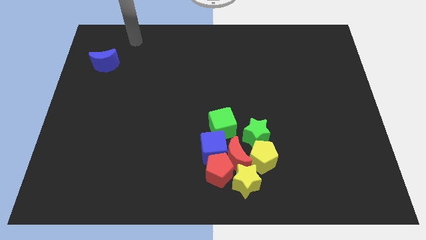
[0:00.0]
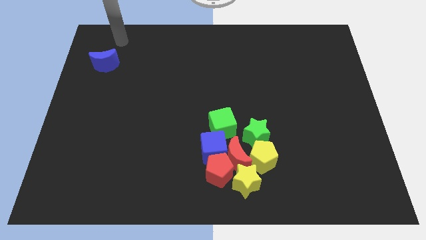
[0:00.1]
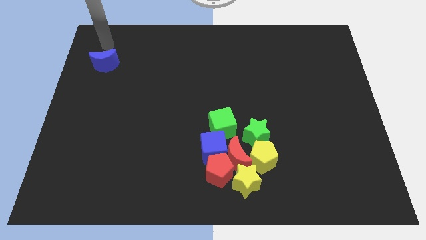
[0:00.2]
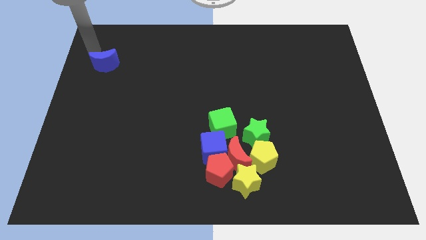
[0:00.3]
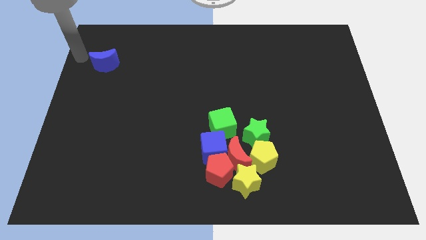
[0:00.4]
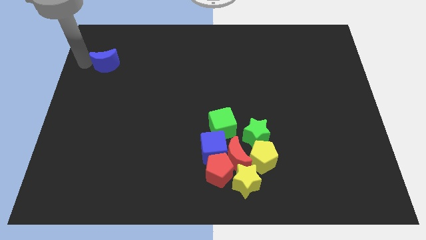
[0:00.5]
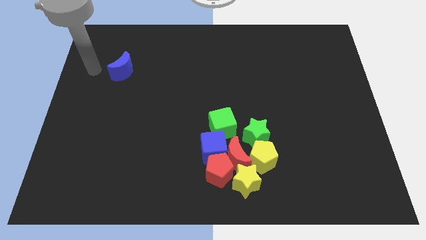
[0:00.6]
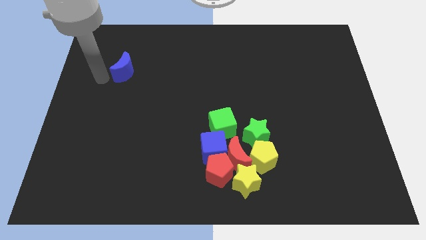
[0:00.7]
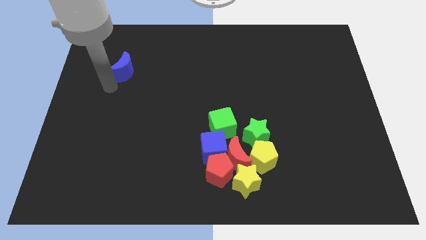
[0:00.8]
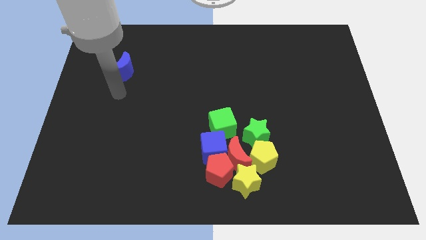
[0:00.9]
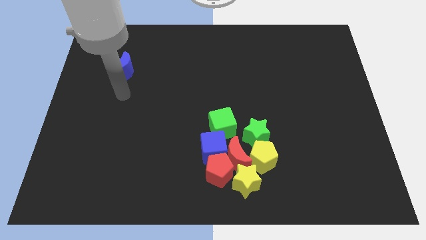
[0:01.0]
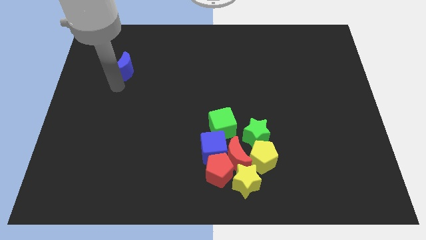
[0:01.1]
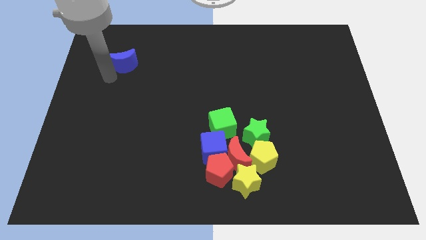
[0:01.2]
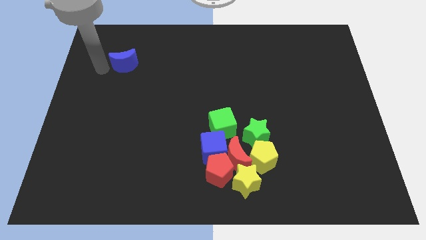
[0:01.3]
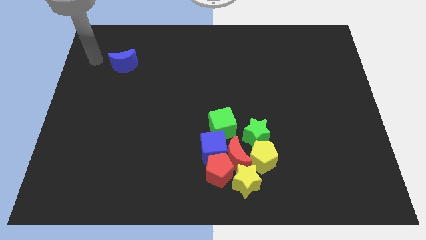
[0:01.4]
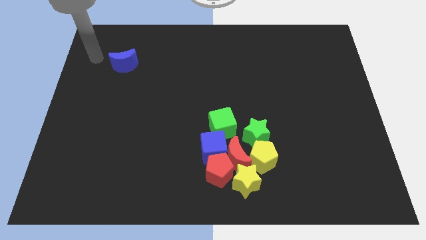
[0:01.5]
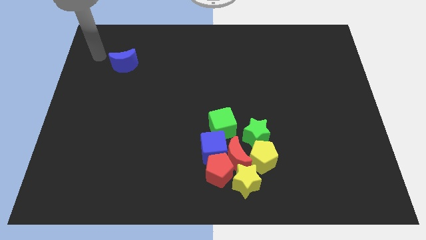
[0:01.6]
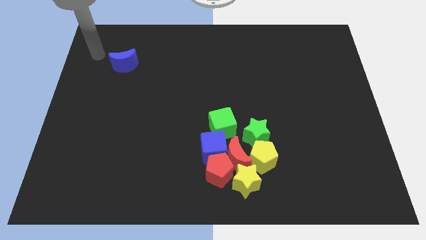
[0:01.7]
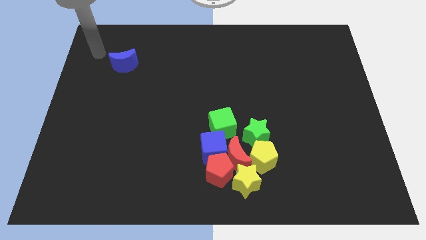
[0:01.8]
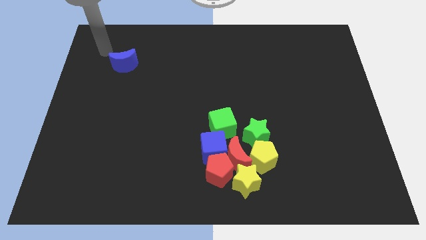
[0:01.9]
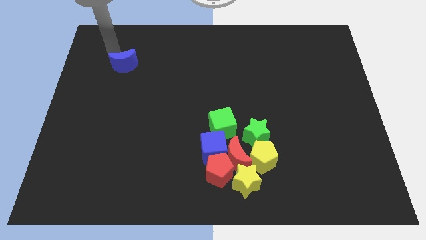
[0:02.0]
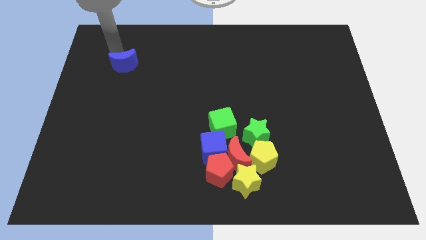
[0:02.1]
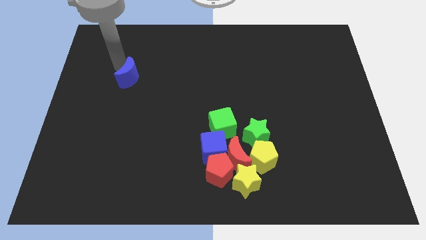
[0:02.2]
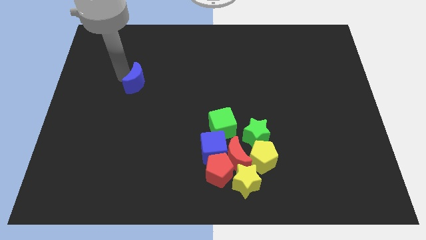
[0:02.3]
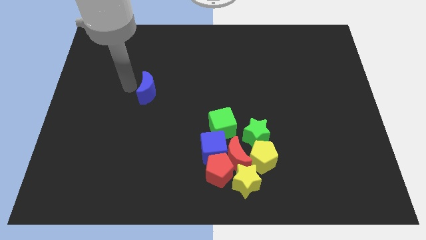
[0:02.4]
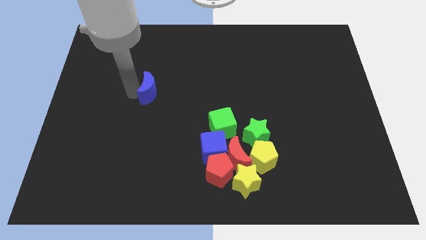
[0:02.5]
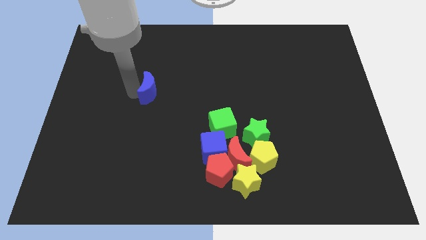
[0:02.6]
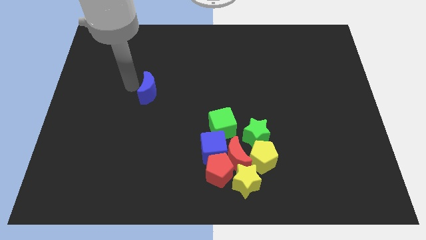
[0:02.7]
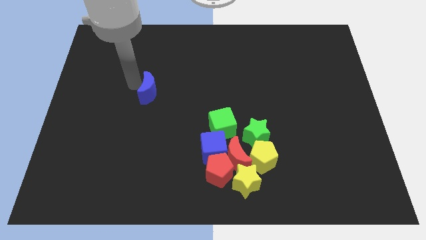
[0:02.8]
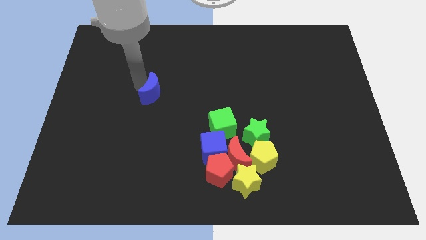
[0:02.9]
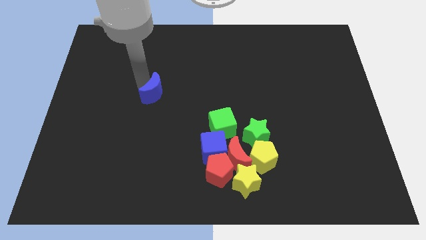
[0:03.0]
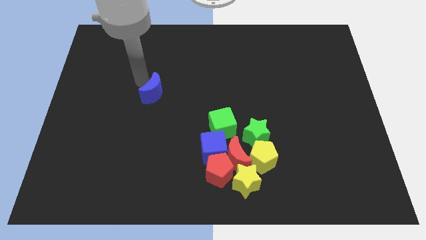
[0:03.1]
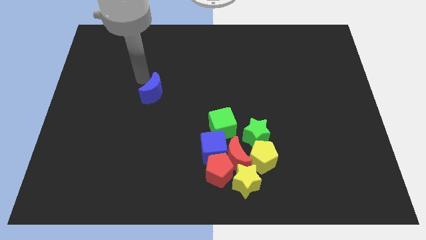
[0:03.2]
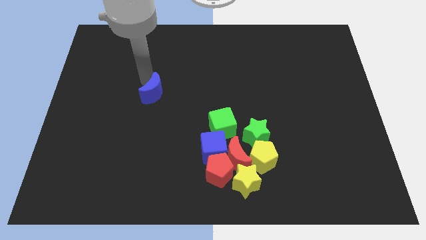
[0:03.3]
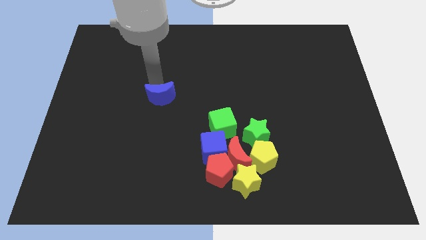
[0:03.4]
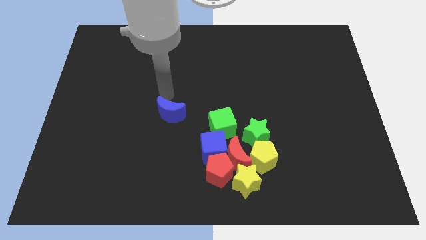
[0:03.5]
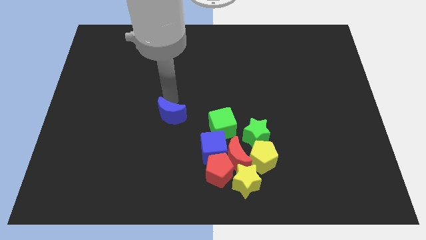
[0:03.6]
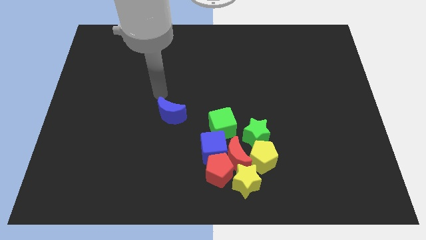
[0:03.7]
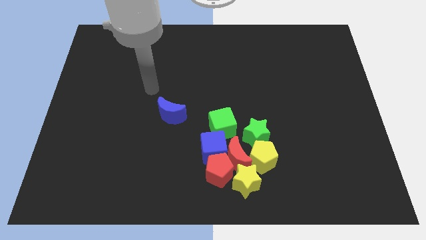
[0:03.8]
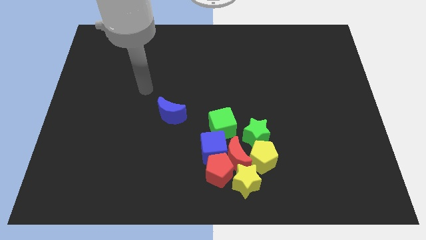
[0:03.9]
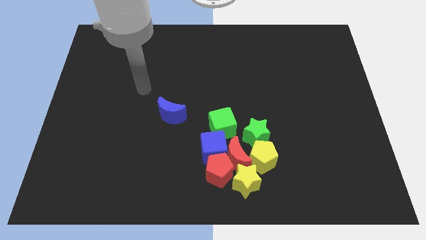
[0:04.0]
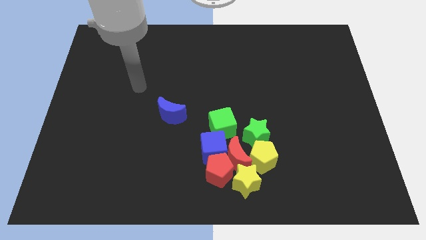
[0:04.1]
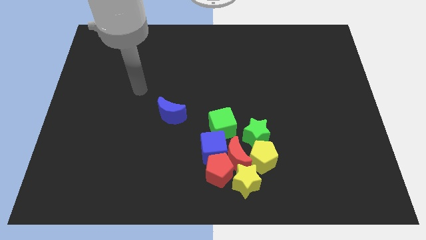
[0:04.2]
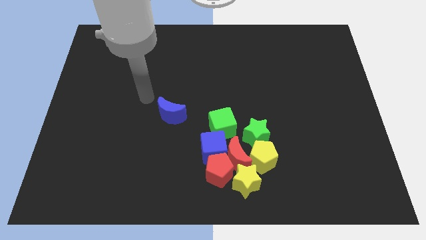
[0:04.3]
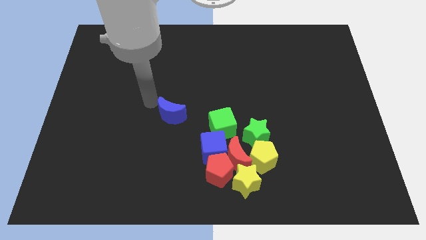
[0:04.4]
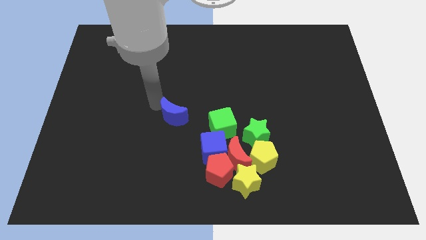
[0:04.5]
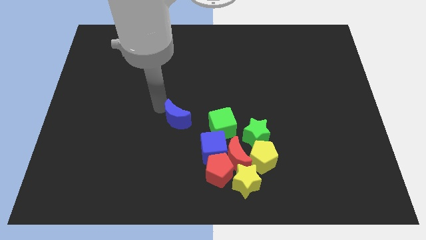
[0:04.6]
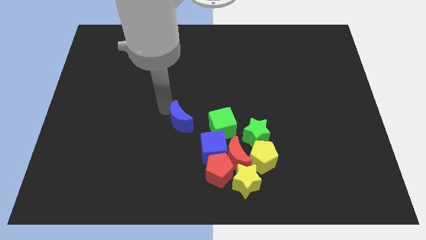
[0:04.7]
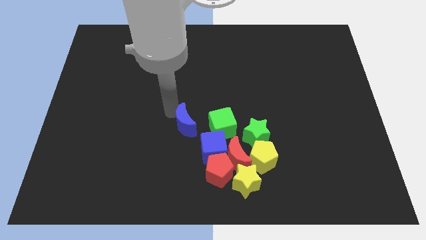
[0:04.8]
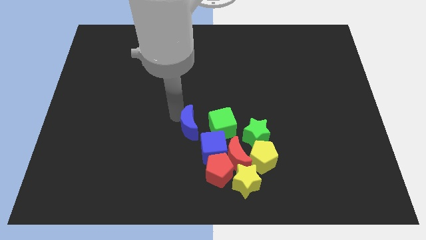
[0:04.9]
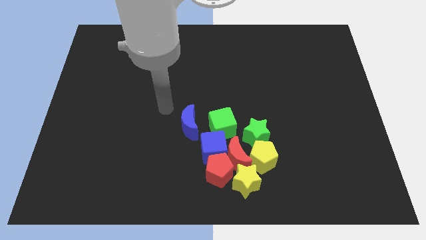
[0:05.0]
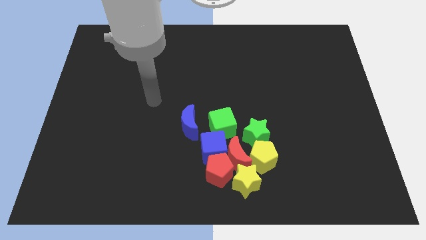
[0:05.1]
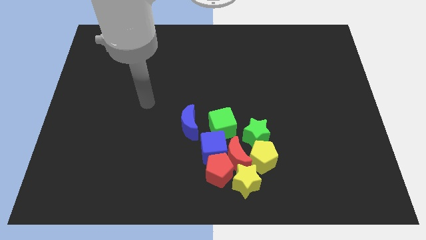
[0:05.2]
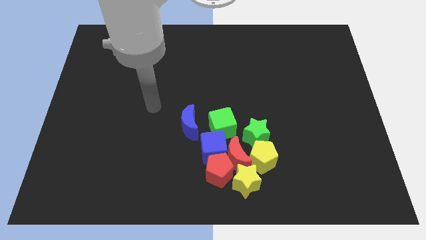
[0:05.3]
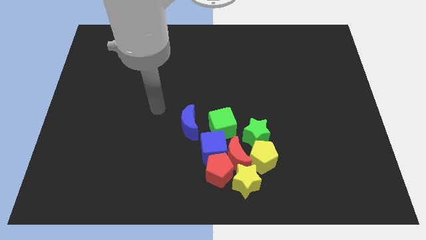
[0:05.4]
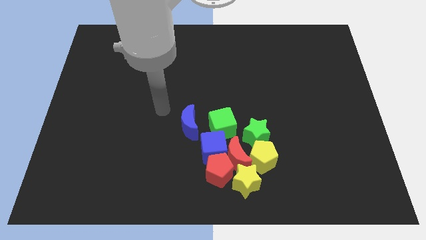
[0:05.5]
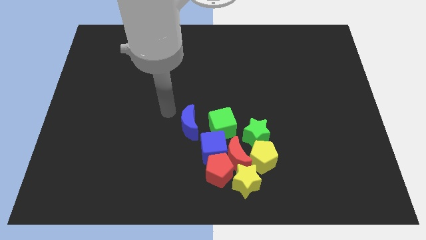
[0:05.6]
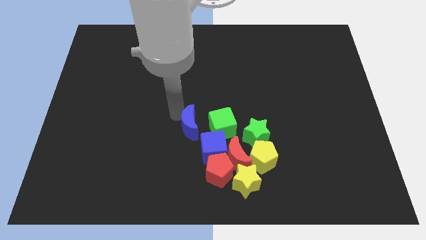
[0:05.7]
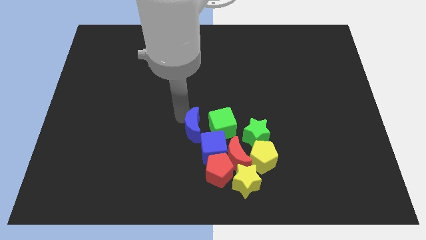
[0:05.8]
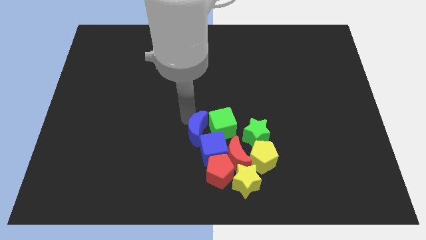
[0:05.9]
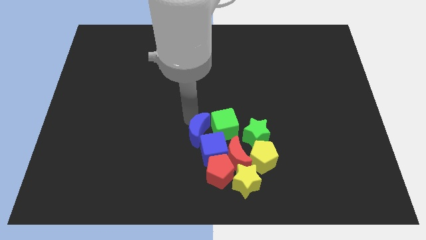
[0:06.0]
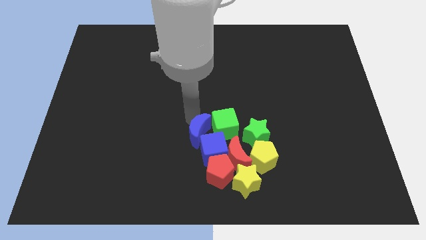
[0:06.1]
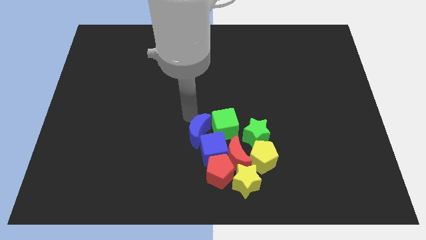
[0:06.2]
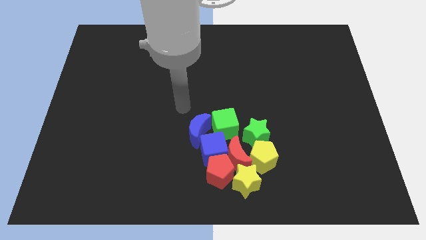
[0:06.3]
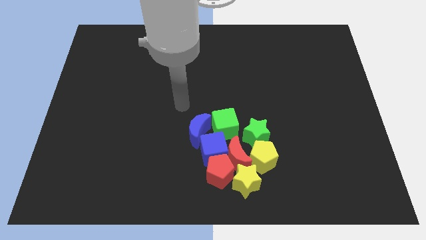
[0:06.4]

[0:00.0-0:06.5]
move the blue moon left above the blue cube

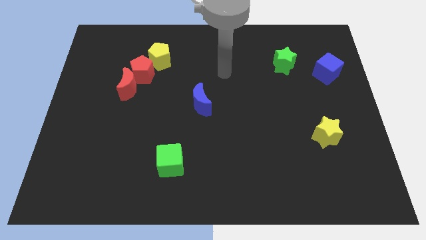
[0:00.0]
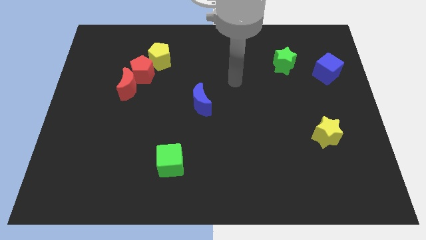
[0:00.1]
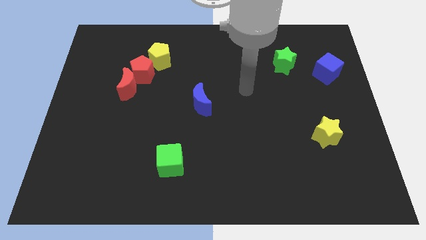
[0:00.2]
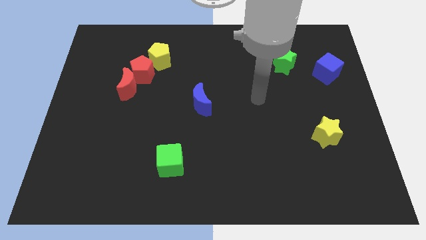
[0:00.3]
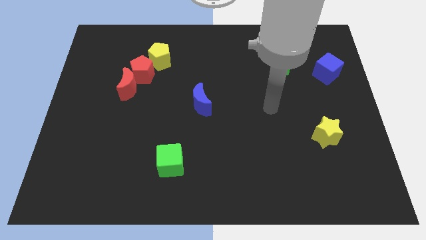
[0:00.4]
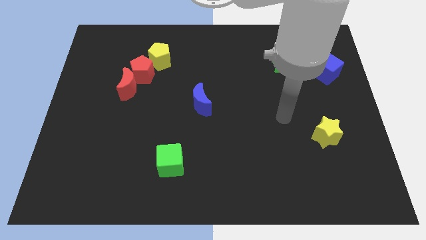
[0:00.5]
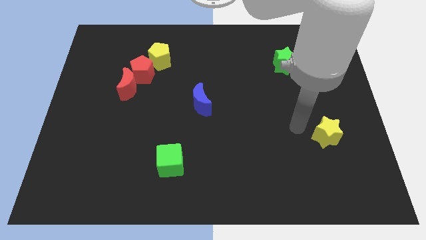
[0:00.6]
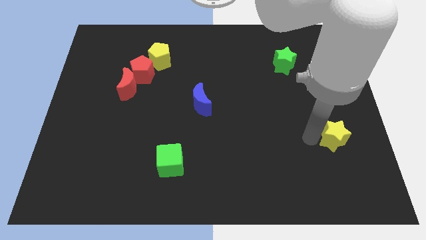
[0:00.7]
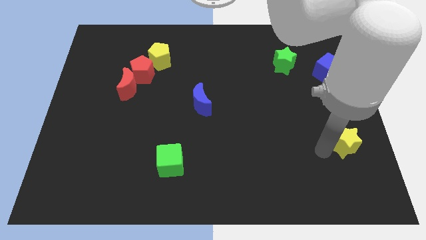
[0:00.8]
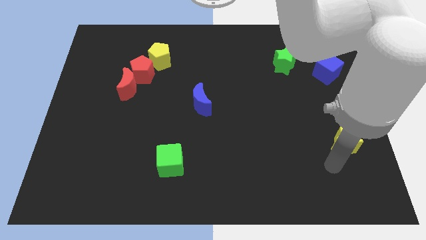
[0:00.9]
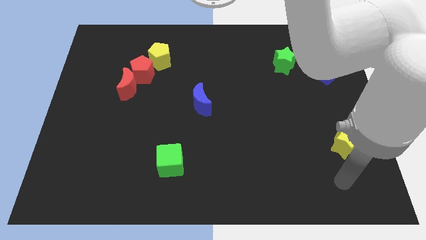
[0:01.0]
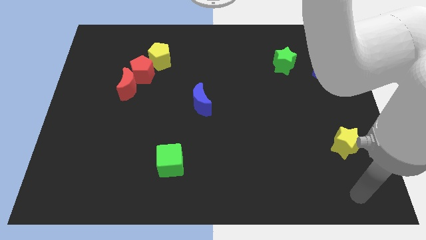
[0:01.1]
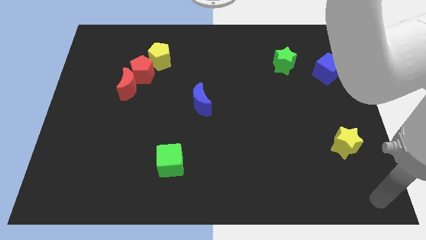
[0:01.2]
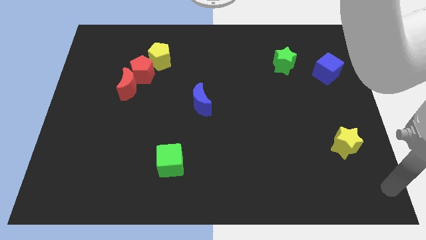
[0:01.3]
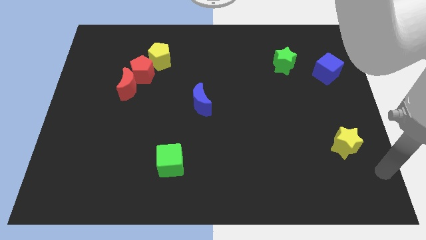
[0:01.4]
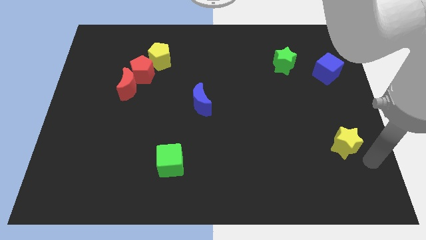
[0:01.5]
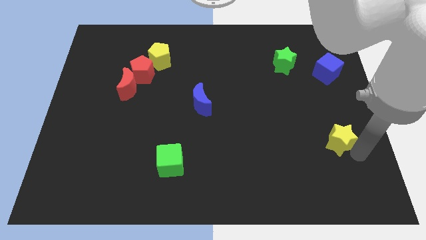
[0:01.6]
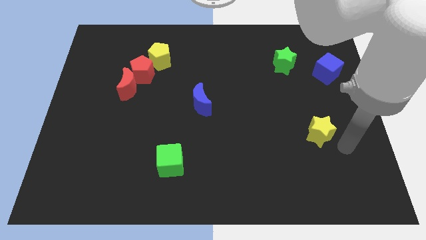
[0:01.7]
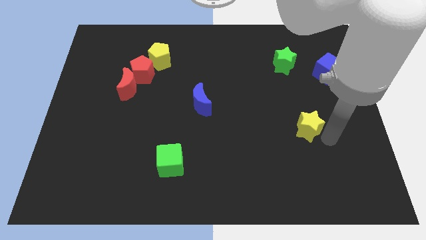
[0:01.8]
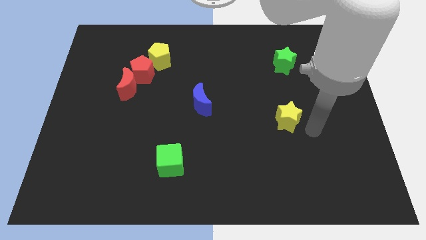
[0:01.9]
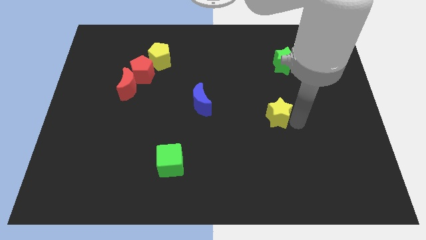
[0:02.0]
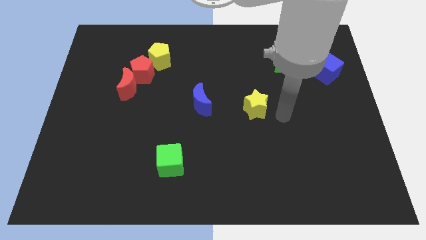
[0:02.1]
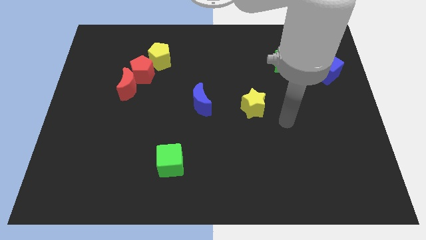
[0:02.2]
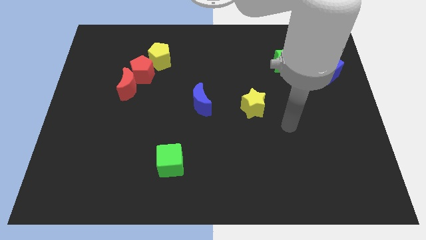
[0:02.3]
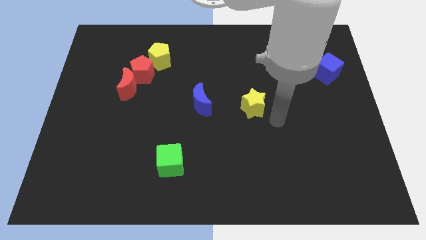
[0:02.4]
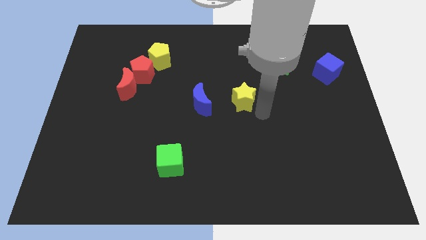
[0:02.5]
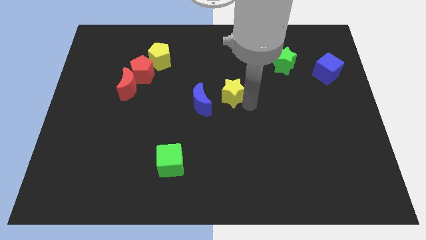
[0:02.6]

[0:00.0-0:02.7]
move the yellow star to the right of the blue moon
